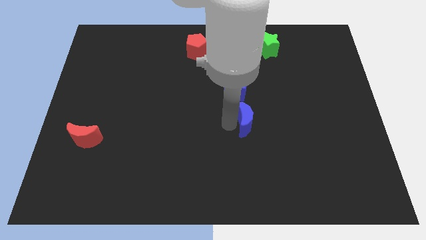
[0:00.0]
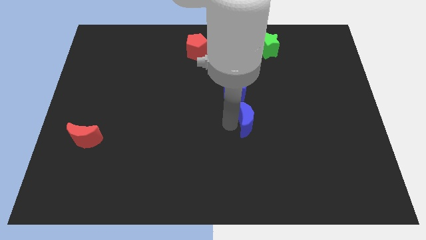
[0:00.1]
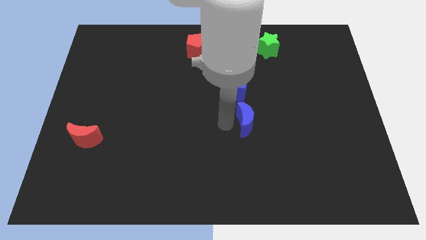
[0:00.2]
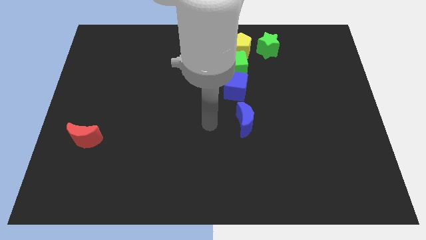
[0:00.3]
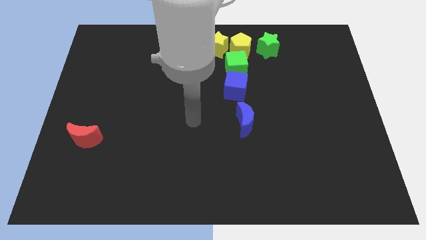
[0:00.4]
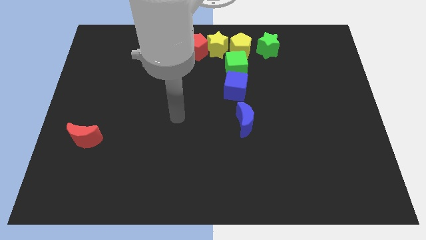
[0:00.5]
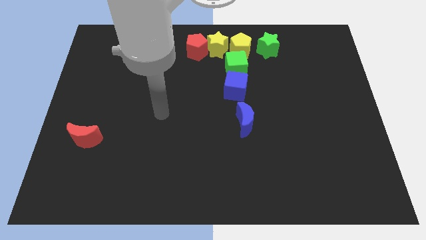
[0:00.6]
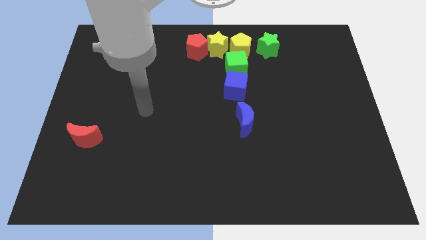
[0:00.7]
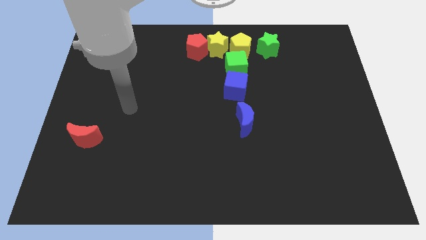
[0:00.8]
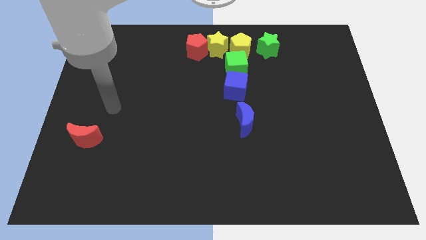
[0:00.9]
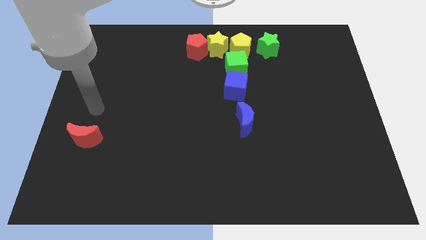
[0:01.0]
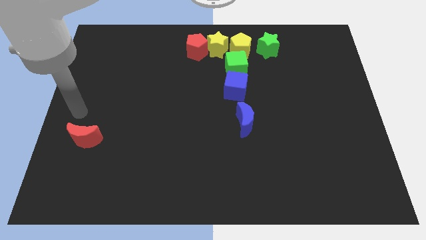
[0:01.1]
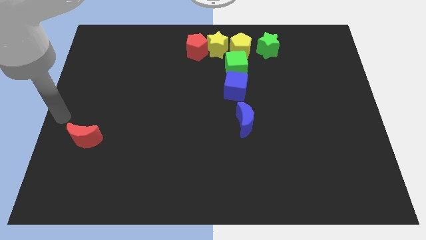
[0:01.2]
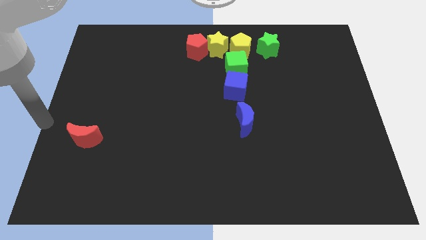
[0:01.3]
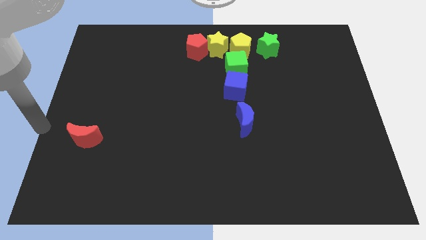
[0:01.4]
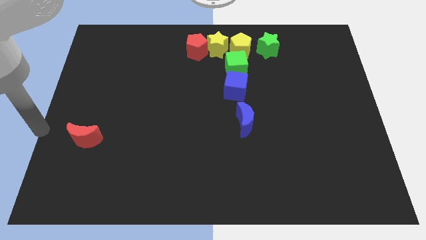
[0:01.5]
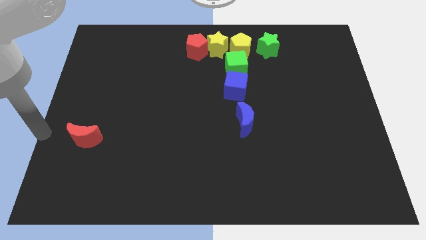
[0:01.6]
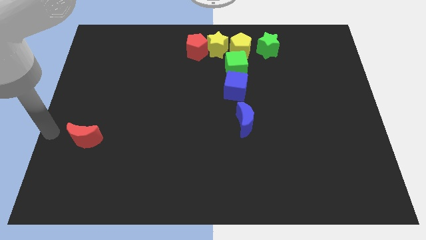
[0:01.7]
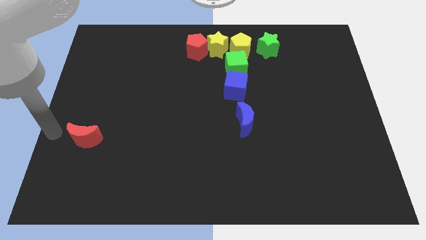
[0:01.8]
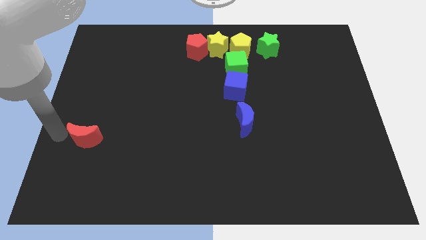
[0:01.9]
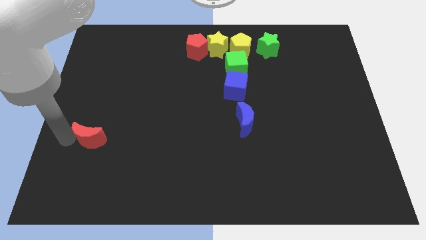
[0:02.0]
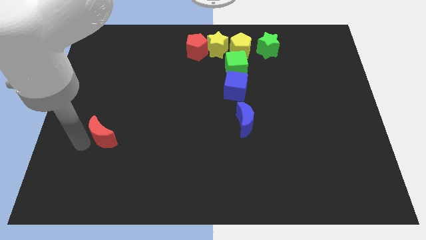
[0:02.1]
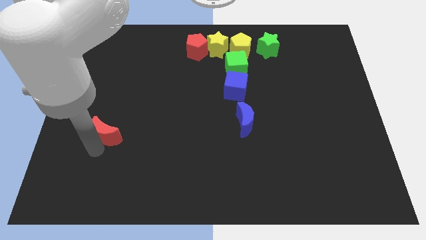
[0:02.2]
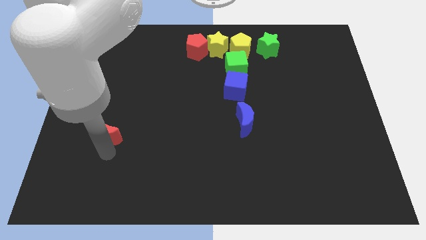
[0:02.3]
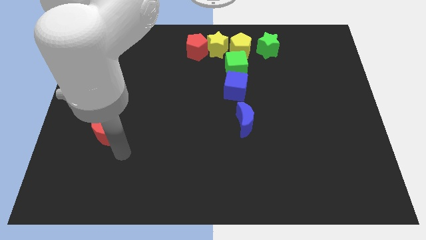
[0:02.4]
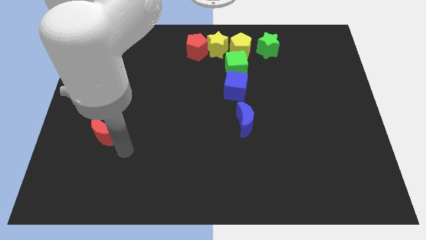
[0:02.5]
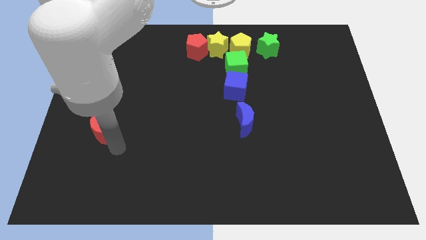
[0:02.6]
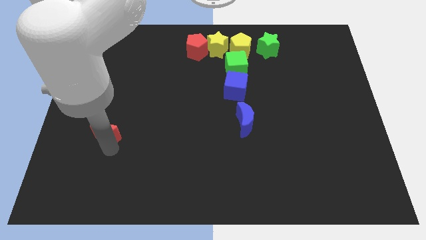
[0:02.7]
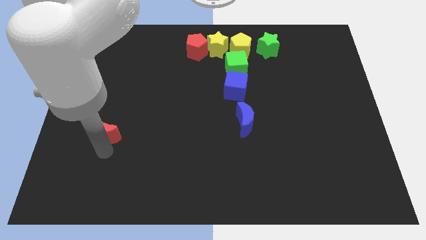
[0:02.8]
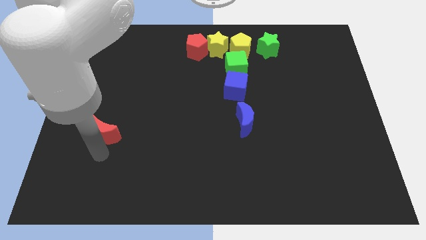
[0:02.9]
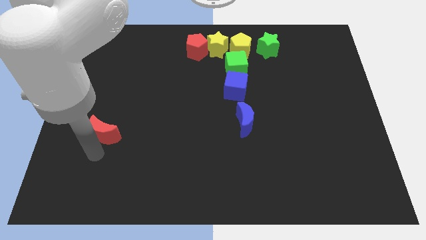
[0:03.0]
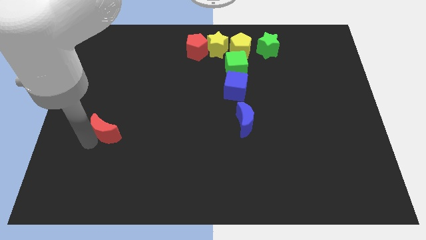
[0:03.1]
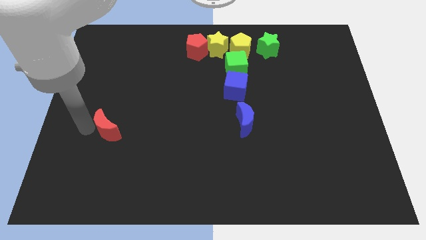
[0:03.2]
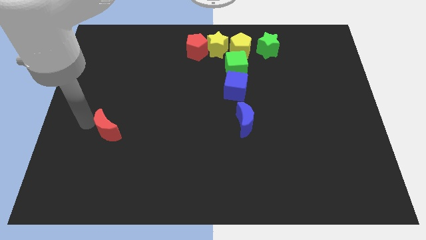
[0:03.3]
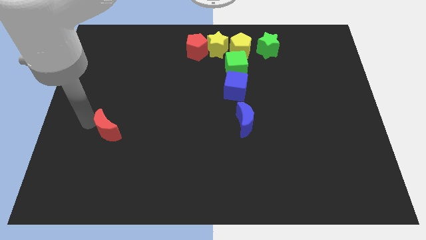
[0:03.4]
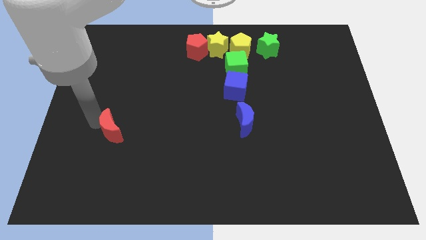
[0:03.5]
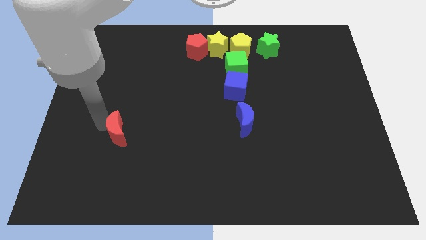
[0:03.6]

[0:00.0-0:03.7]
slide the blue moon parallel to the blue moon

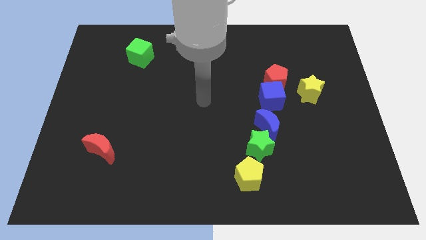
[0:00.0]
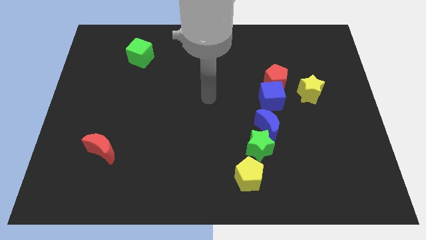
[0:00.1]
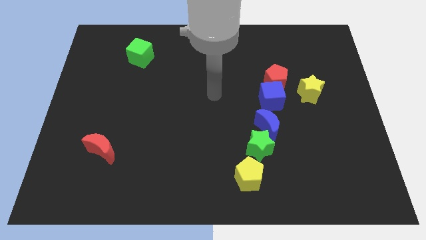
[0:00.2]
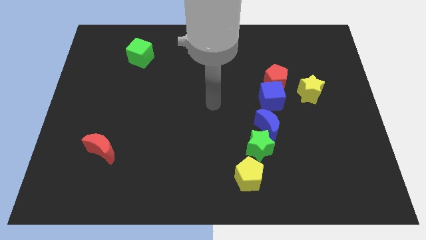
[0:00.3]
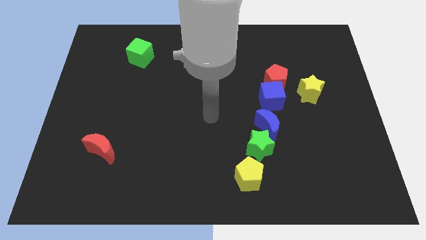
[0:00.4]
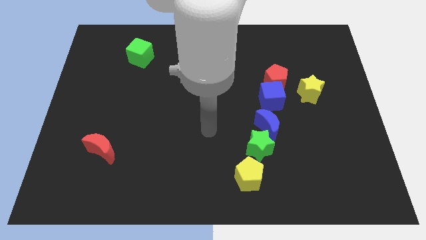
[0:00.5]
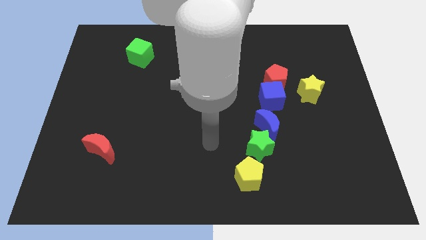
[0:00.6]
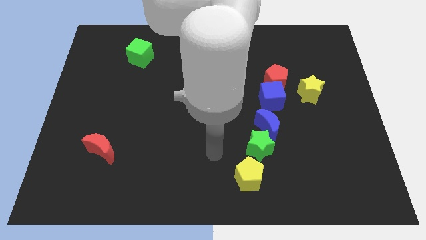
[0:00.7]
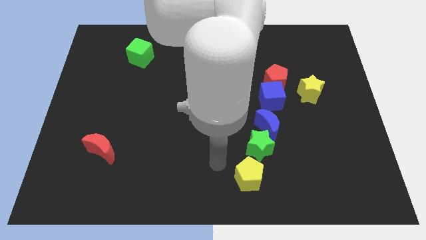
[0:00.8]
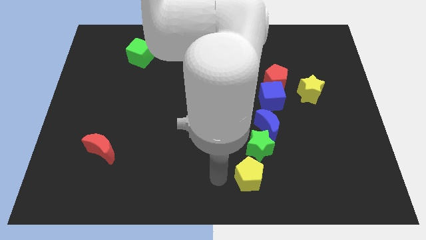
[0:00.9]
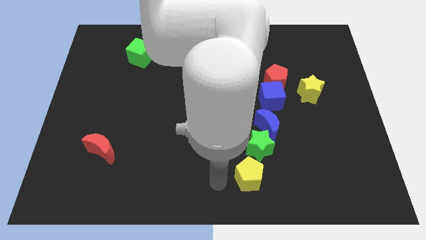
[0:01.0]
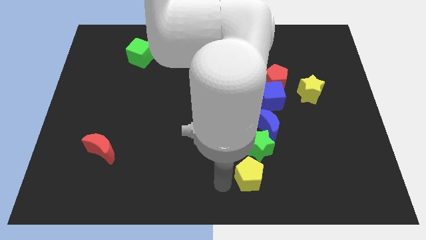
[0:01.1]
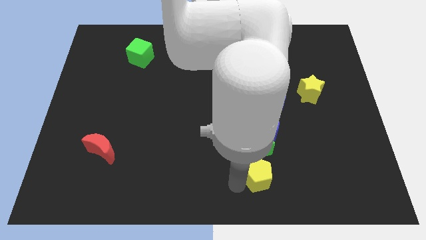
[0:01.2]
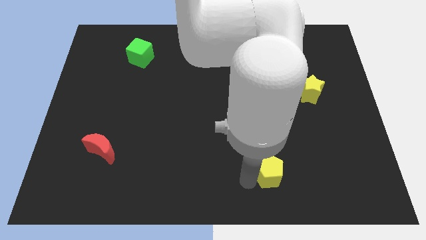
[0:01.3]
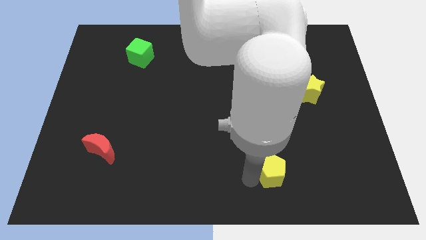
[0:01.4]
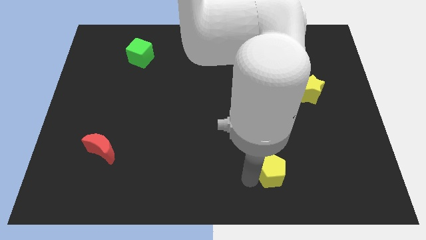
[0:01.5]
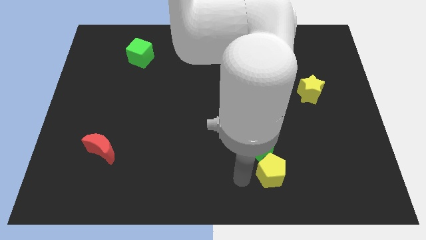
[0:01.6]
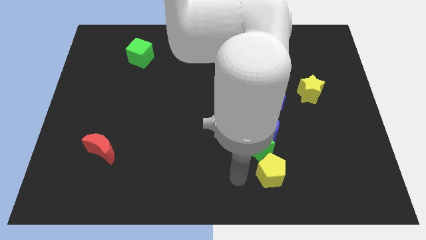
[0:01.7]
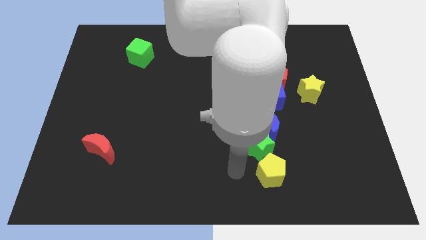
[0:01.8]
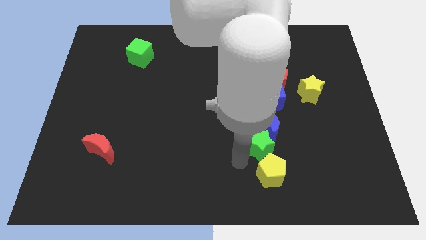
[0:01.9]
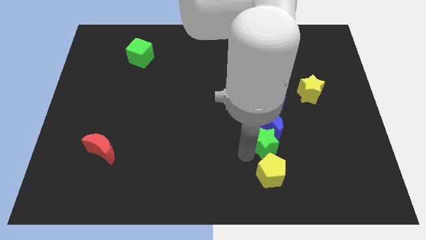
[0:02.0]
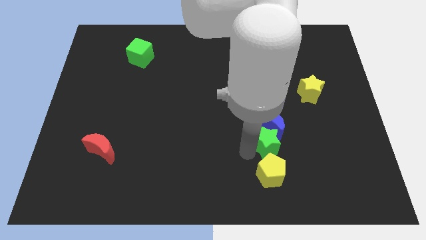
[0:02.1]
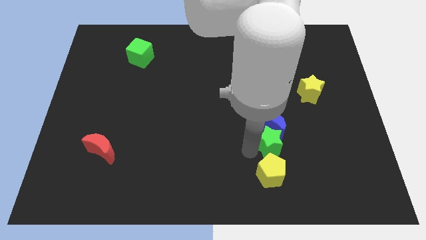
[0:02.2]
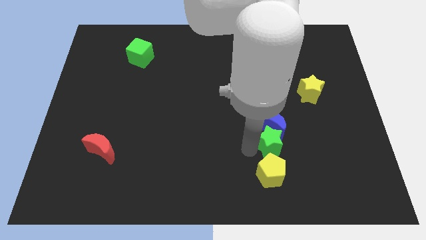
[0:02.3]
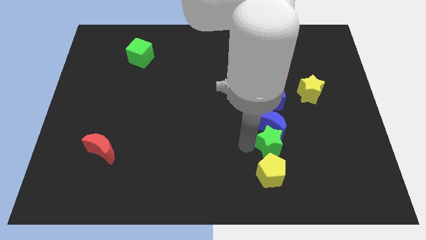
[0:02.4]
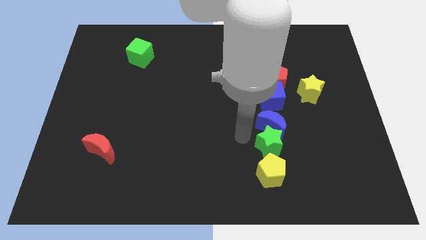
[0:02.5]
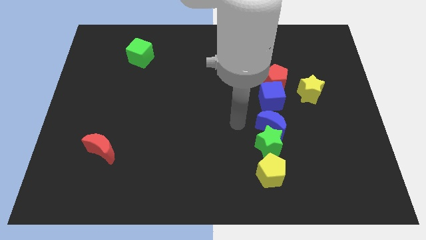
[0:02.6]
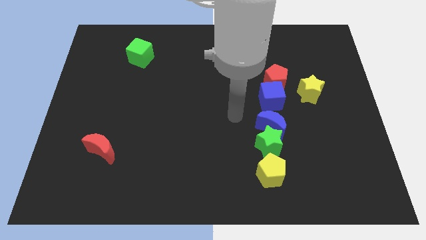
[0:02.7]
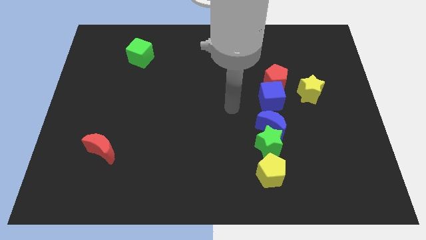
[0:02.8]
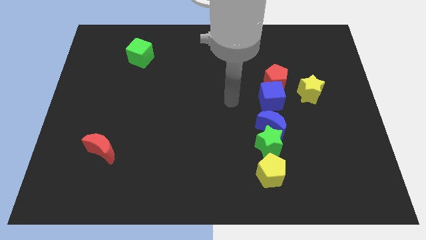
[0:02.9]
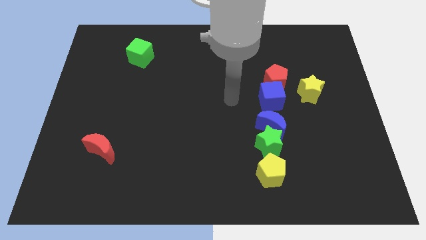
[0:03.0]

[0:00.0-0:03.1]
push the yellow pentagon and the green star slightly to the right to form a line

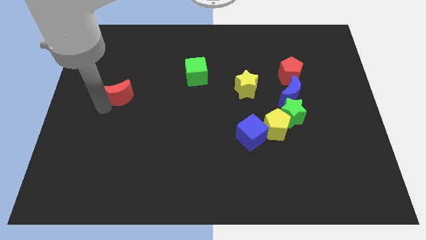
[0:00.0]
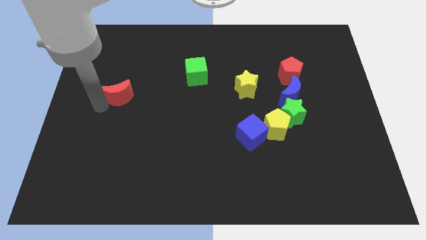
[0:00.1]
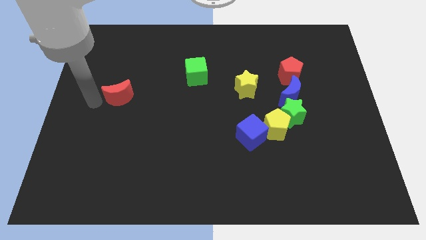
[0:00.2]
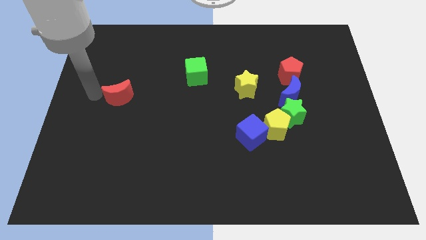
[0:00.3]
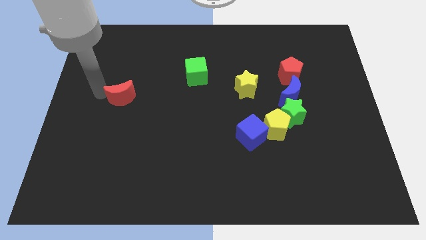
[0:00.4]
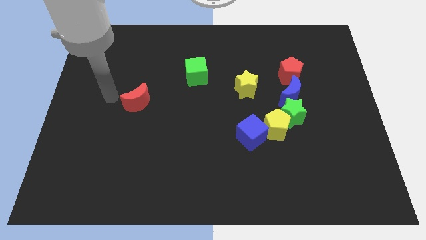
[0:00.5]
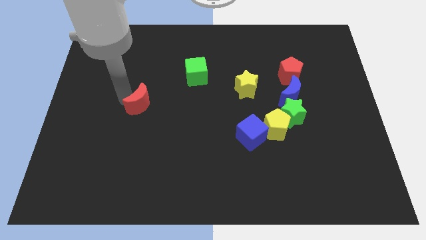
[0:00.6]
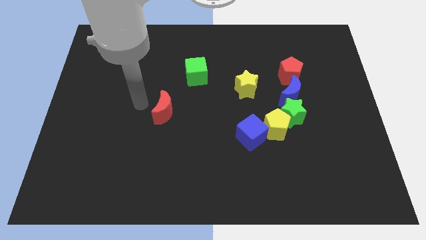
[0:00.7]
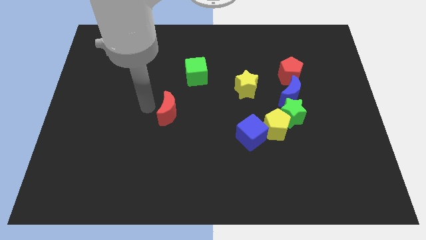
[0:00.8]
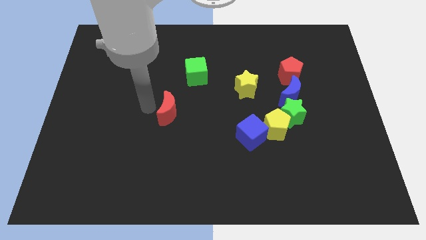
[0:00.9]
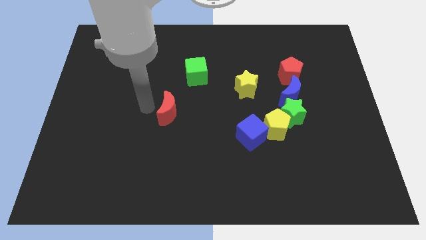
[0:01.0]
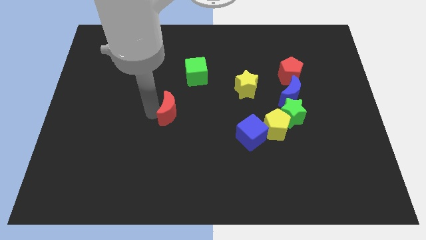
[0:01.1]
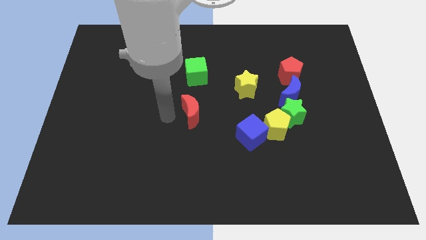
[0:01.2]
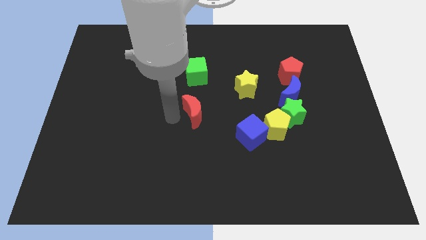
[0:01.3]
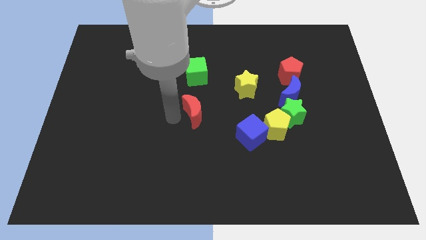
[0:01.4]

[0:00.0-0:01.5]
push the red crescent to the bottom of the green cube

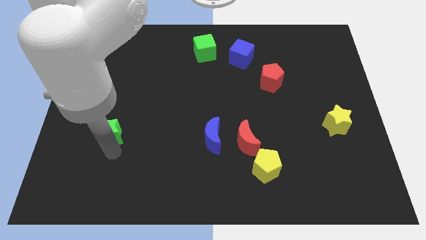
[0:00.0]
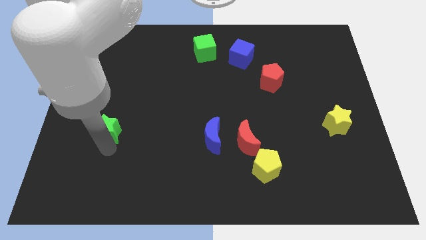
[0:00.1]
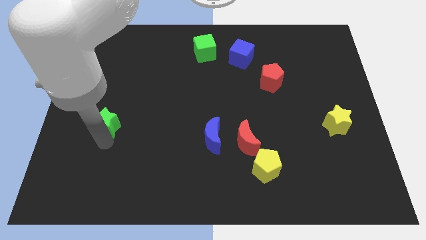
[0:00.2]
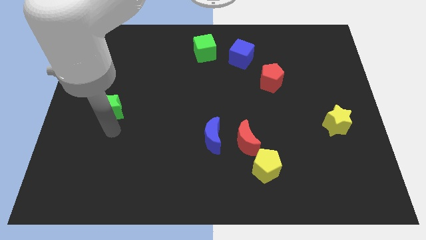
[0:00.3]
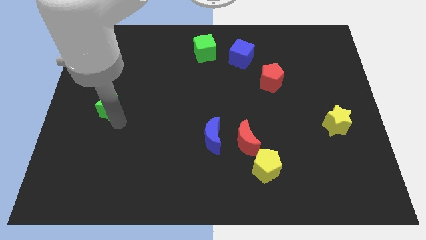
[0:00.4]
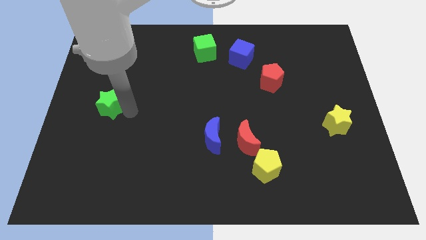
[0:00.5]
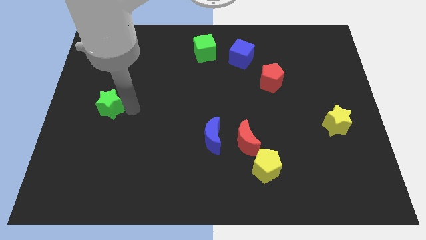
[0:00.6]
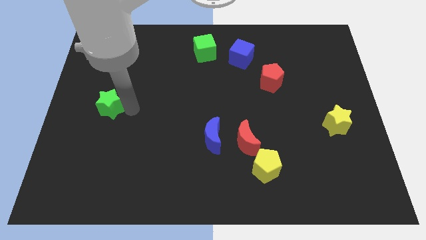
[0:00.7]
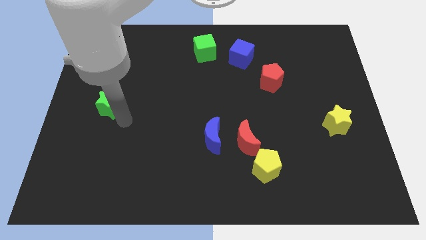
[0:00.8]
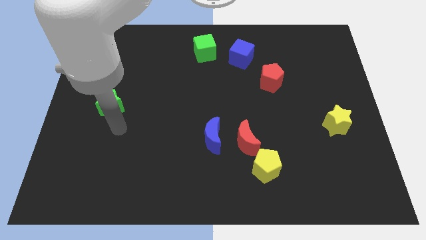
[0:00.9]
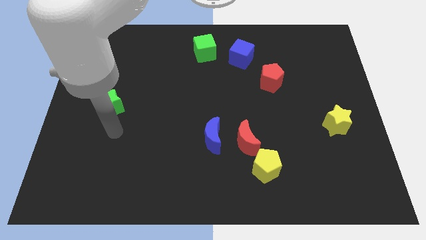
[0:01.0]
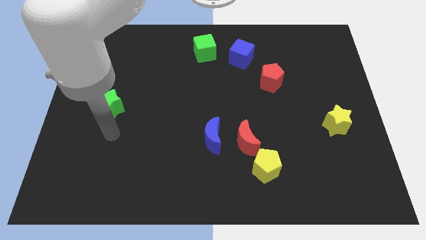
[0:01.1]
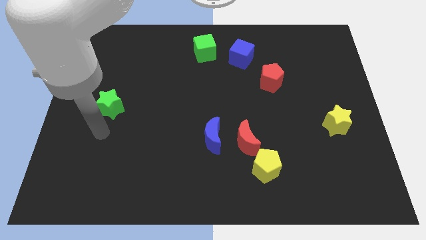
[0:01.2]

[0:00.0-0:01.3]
push the green star upwards
